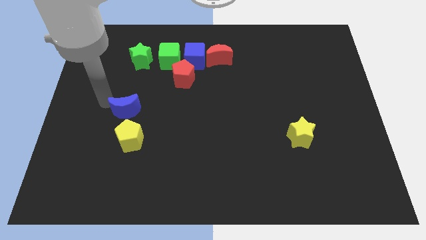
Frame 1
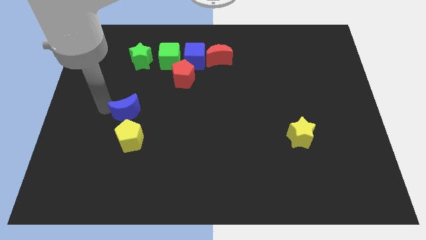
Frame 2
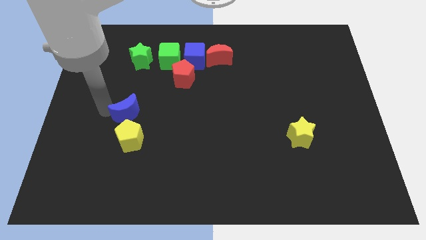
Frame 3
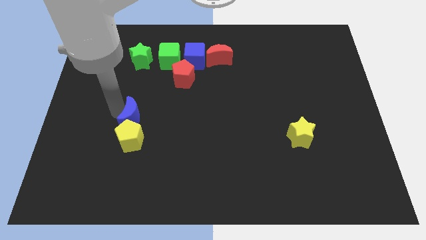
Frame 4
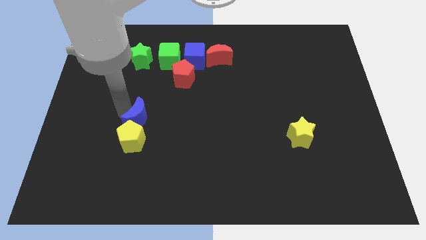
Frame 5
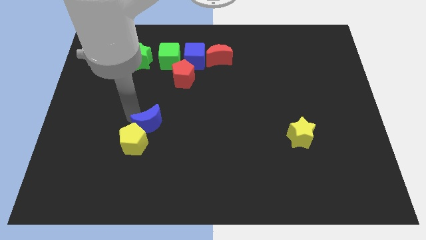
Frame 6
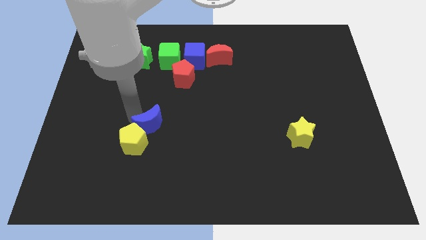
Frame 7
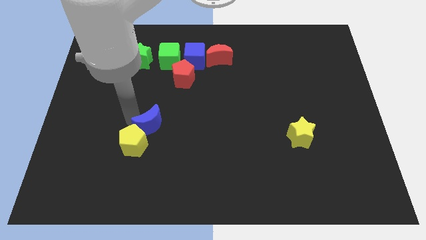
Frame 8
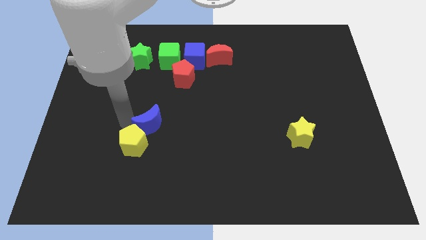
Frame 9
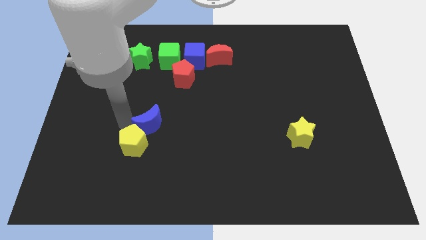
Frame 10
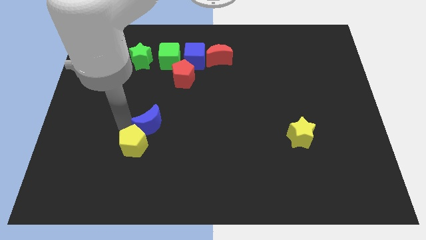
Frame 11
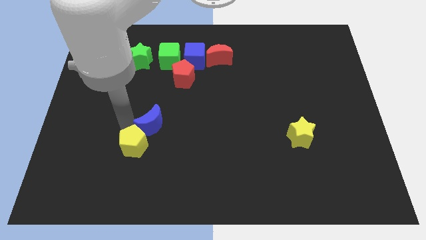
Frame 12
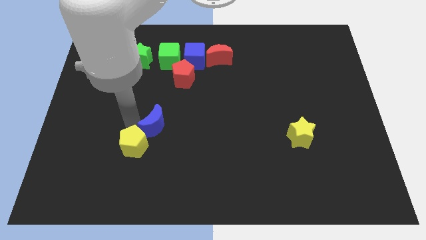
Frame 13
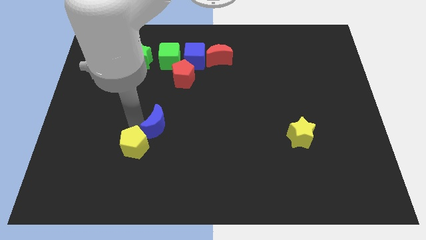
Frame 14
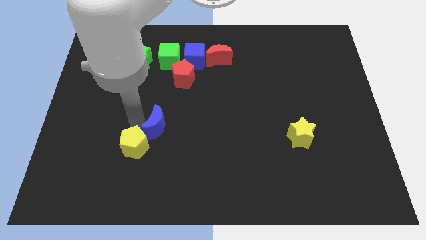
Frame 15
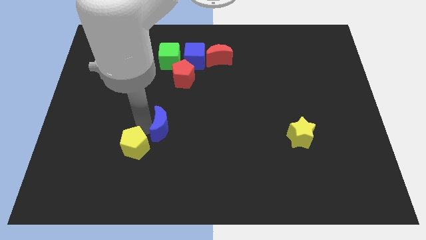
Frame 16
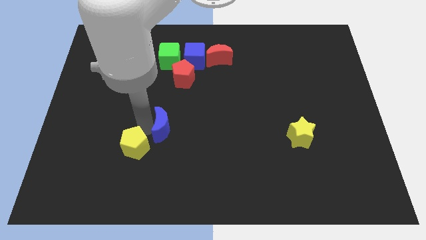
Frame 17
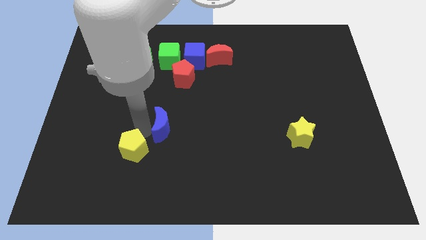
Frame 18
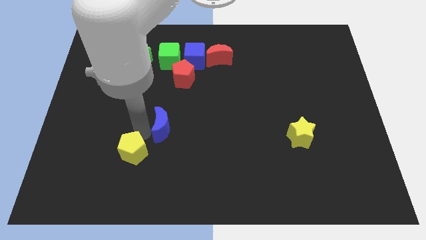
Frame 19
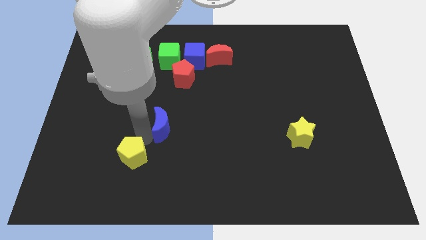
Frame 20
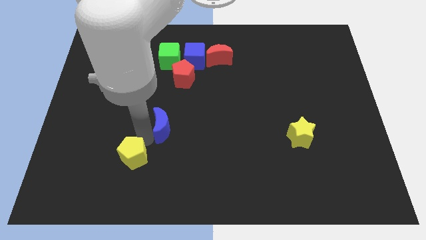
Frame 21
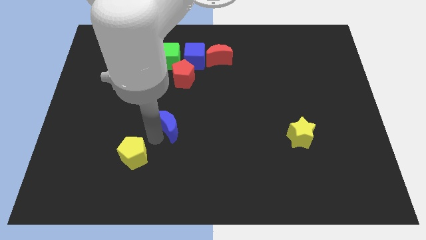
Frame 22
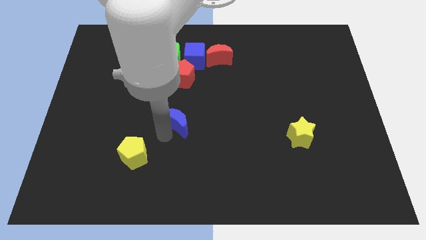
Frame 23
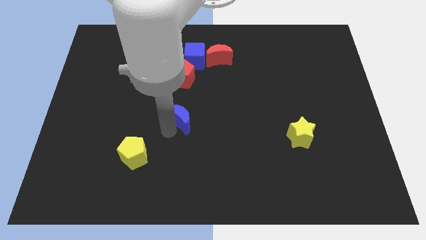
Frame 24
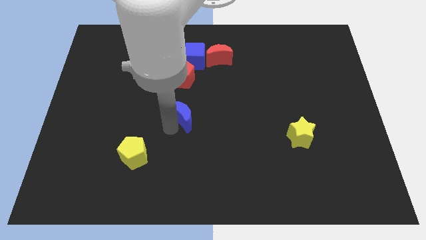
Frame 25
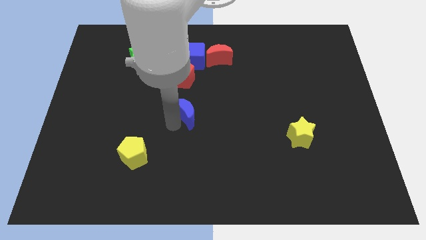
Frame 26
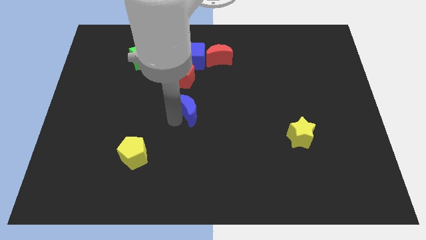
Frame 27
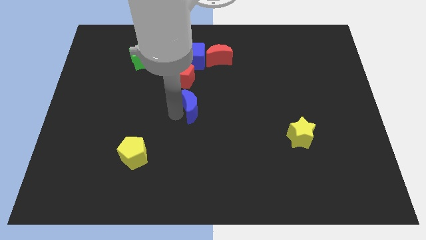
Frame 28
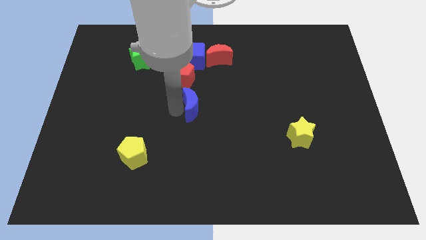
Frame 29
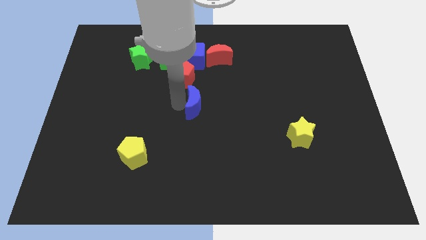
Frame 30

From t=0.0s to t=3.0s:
push the blue moon towards the red pentagon

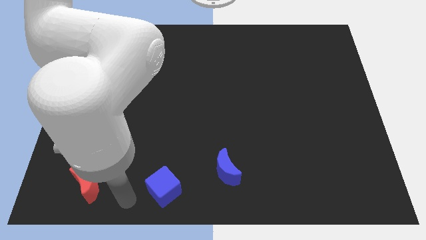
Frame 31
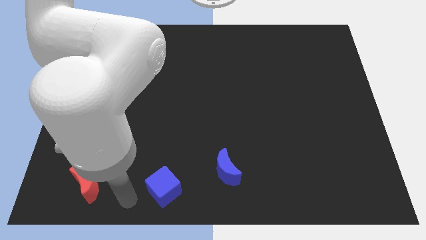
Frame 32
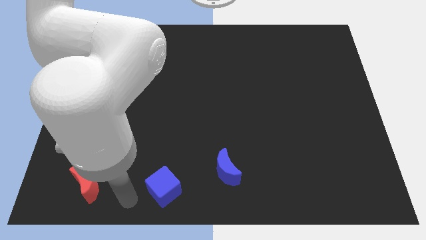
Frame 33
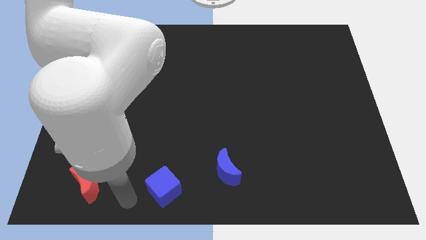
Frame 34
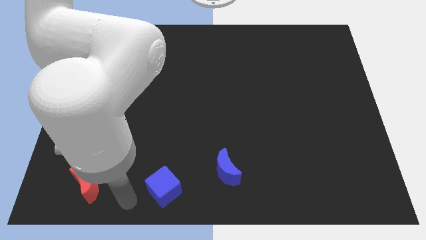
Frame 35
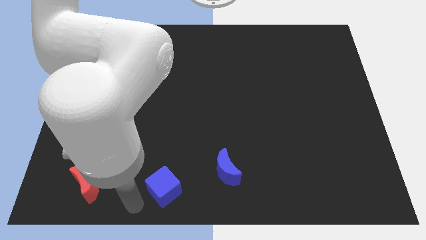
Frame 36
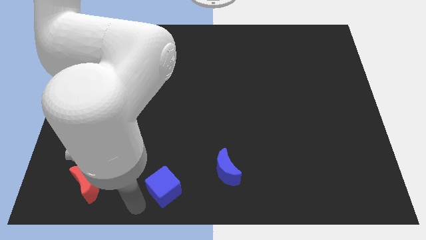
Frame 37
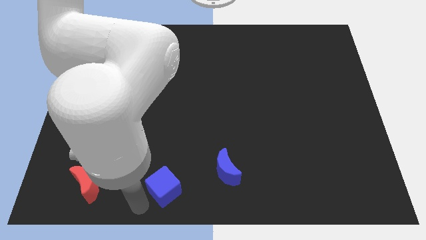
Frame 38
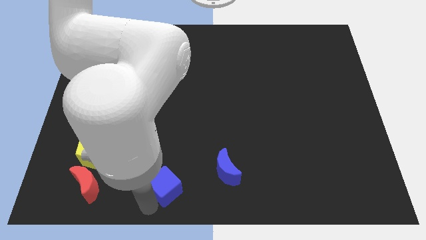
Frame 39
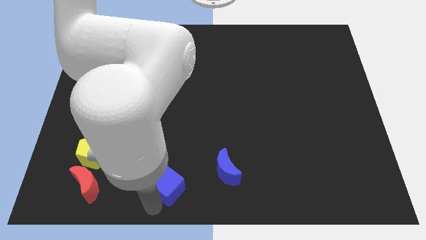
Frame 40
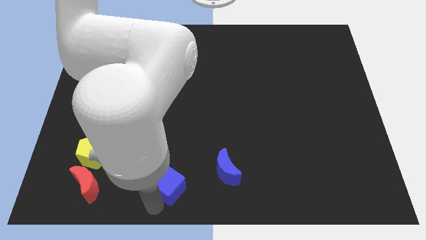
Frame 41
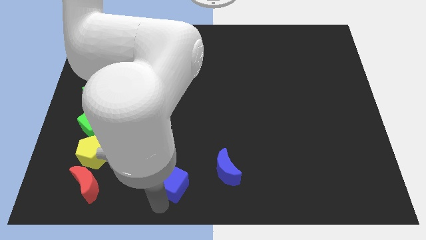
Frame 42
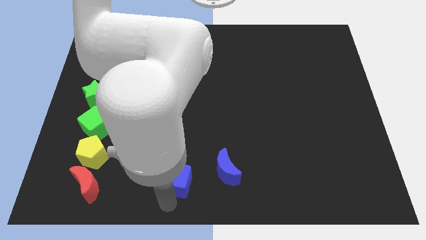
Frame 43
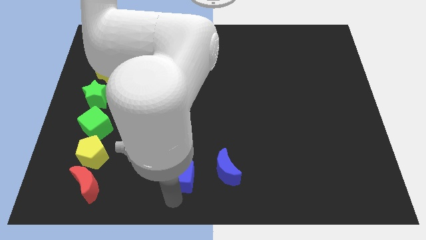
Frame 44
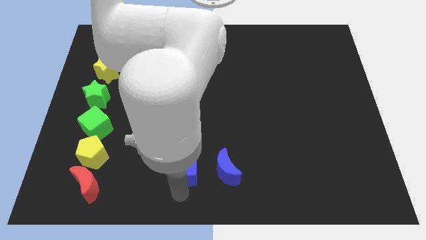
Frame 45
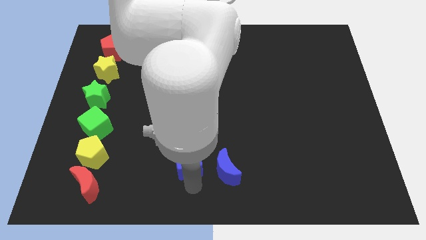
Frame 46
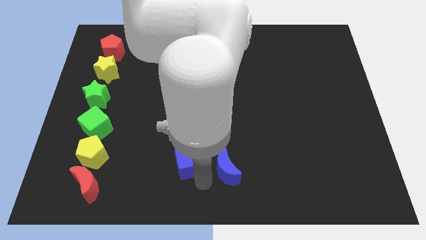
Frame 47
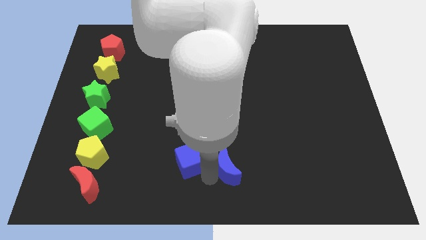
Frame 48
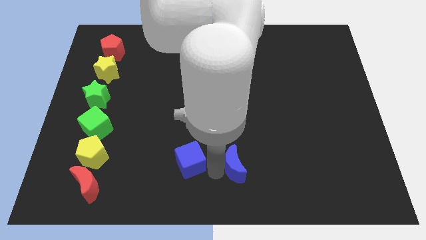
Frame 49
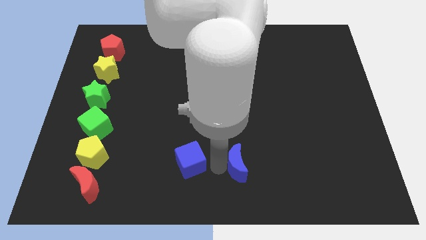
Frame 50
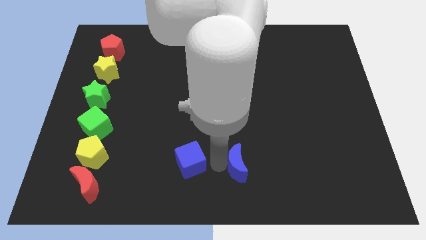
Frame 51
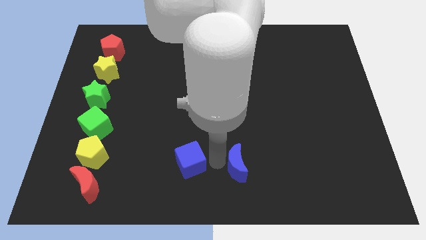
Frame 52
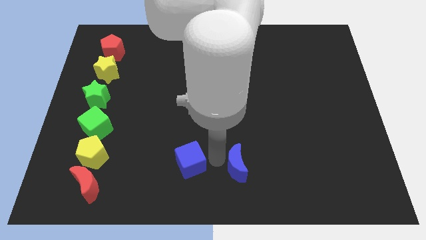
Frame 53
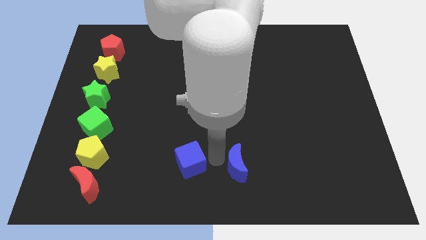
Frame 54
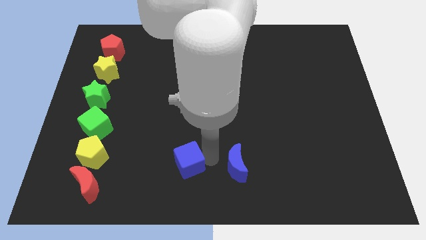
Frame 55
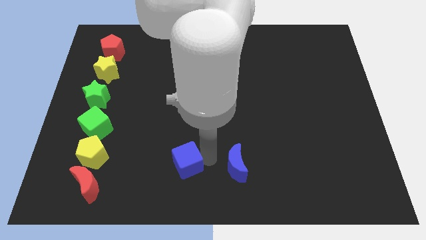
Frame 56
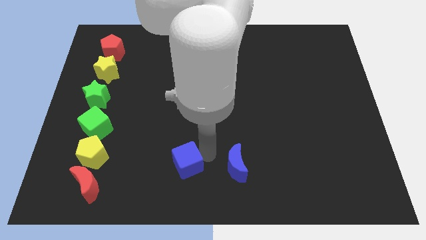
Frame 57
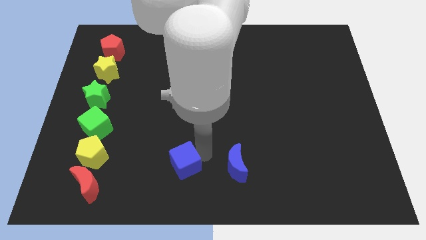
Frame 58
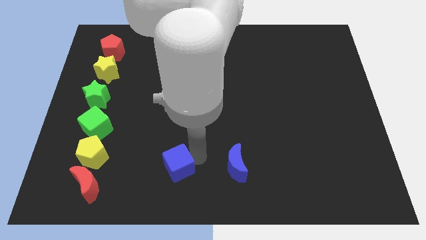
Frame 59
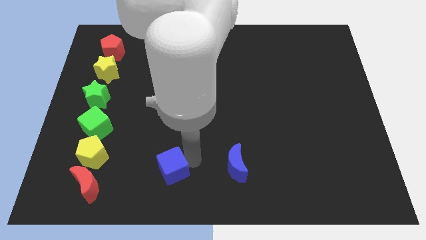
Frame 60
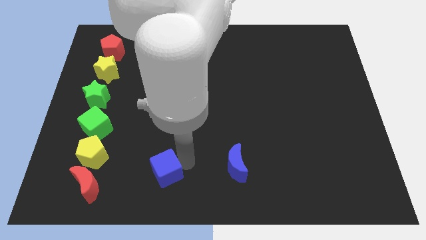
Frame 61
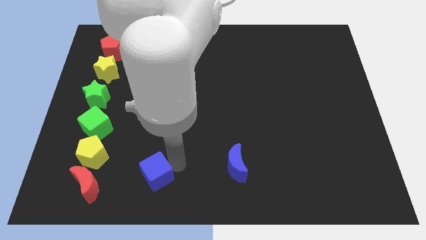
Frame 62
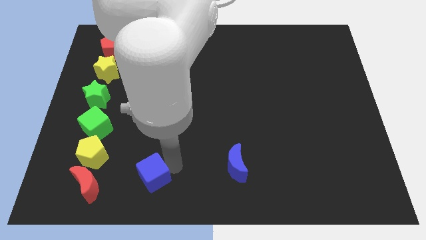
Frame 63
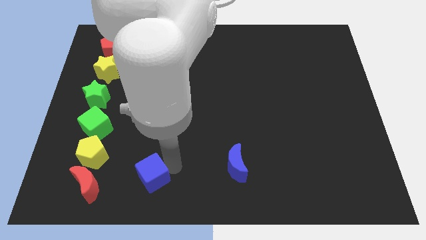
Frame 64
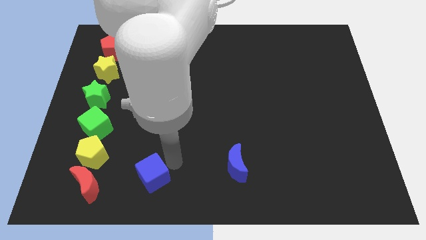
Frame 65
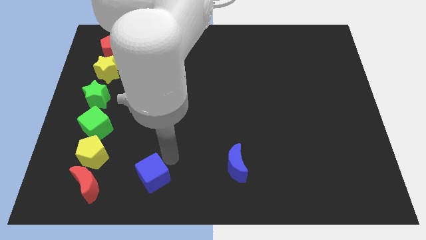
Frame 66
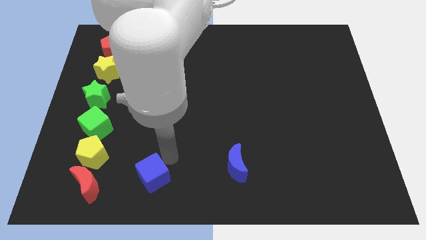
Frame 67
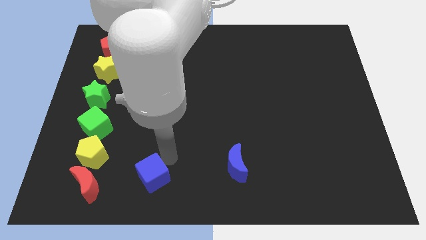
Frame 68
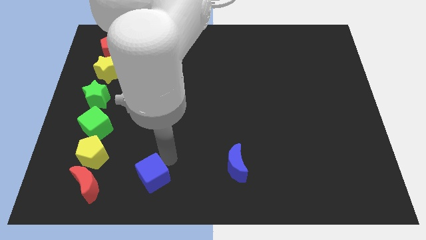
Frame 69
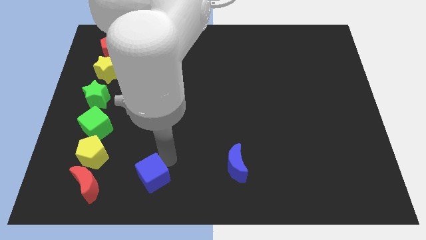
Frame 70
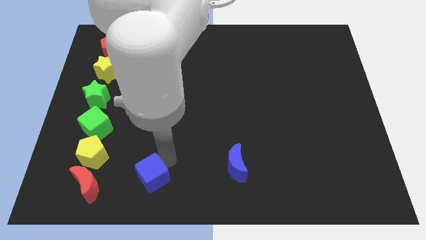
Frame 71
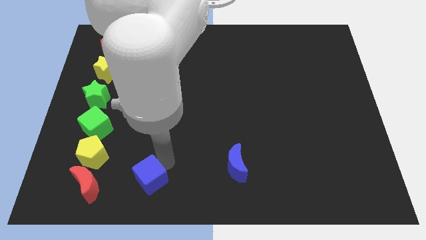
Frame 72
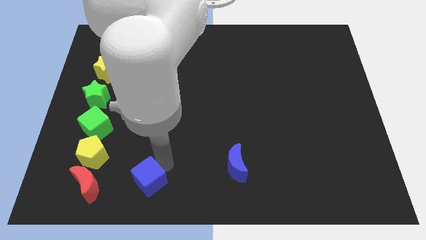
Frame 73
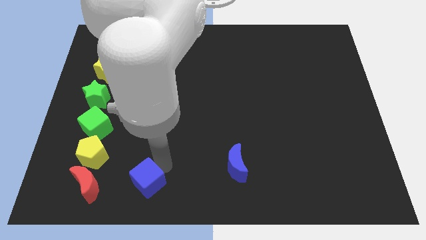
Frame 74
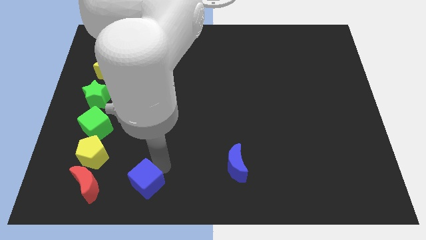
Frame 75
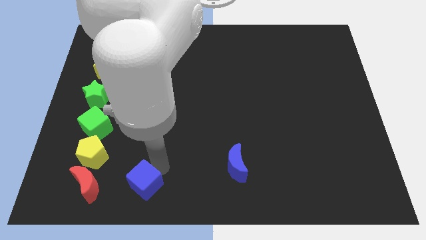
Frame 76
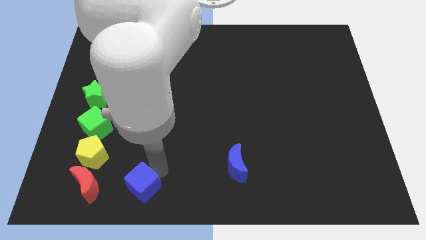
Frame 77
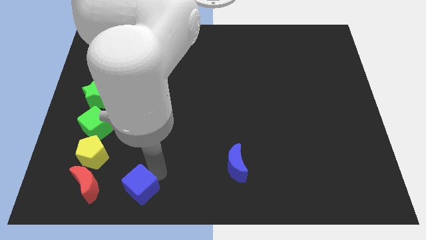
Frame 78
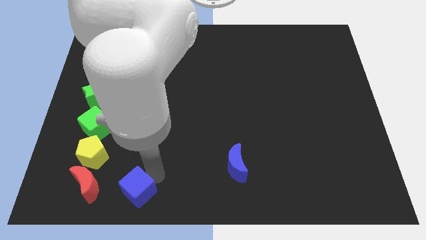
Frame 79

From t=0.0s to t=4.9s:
place the blue cube right to the red moon

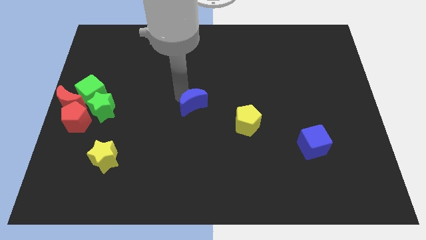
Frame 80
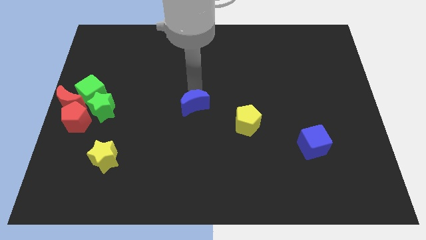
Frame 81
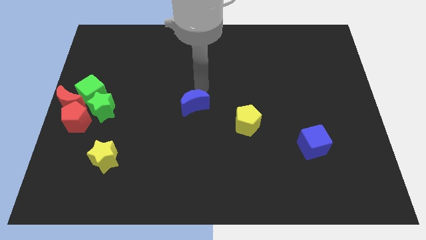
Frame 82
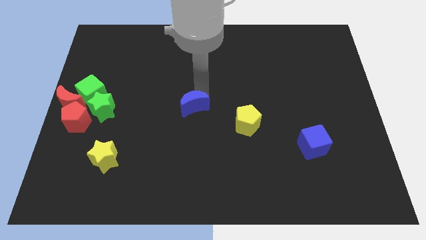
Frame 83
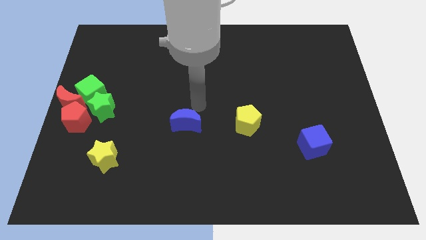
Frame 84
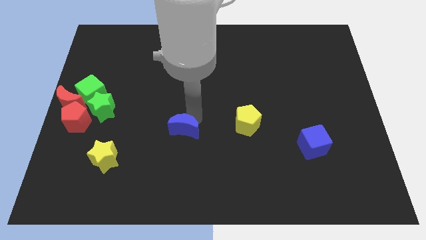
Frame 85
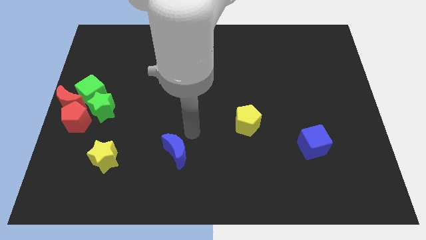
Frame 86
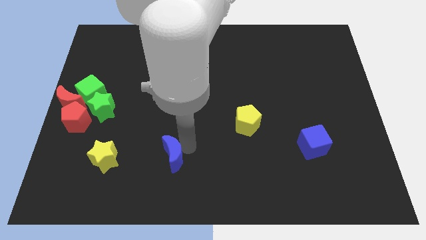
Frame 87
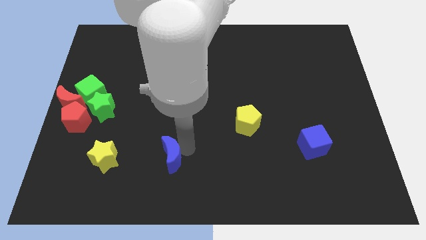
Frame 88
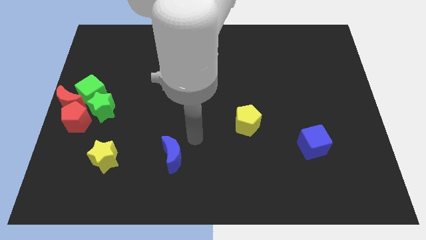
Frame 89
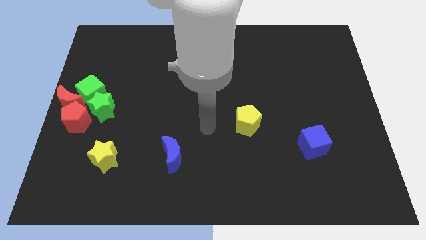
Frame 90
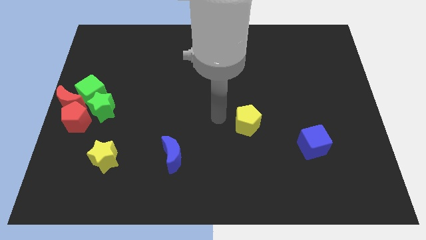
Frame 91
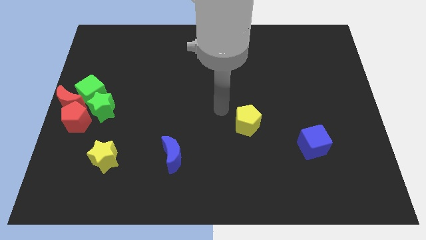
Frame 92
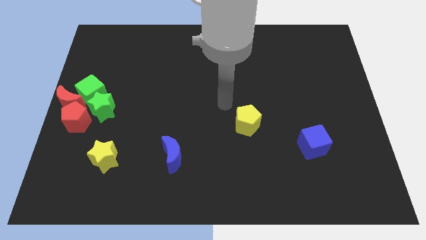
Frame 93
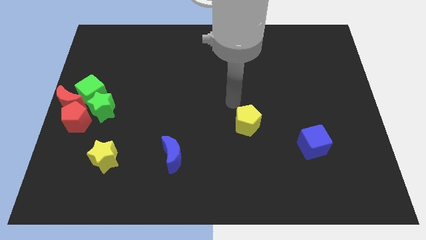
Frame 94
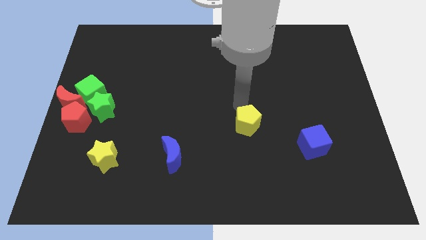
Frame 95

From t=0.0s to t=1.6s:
put the blue crescent parallel to the yellow star
